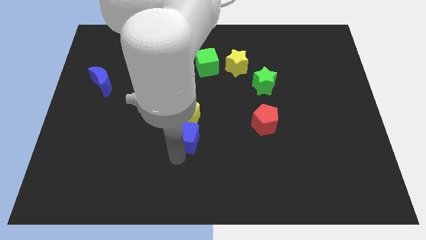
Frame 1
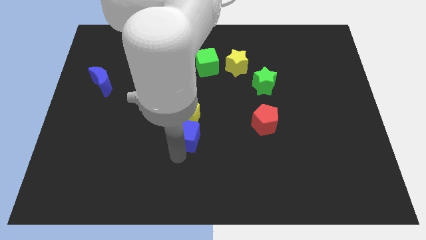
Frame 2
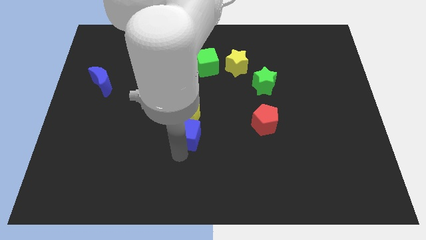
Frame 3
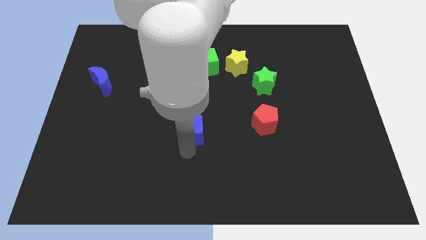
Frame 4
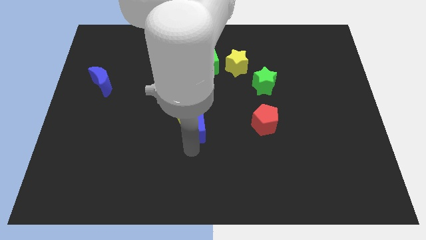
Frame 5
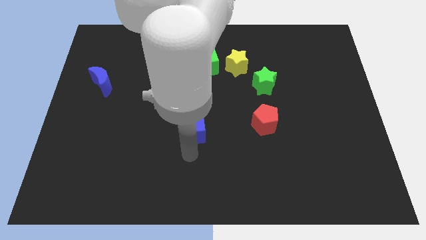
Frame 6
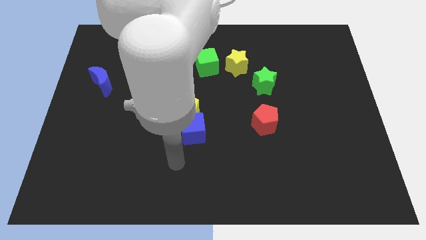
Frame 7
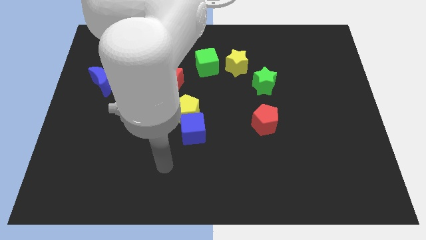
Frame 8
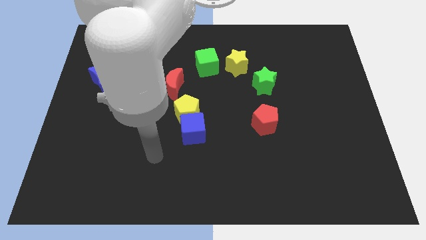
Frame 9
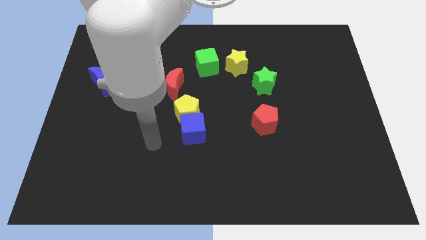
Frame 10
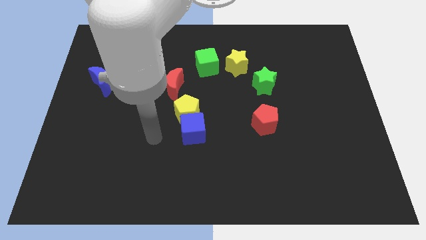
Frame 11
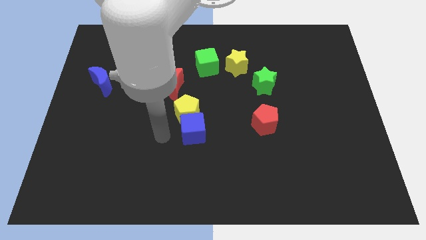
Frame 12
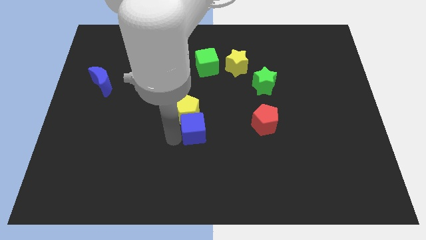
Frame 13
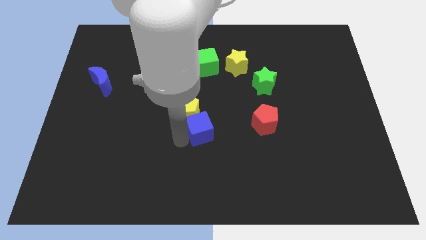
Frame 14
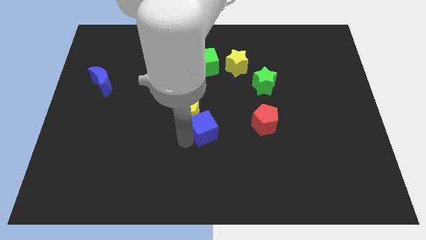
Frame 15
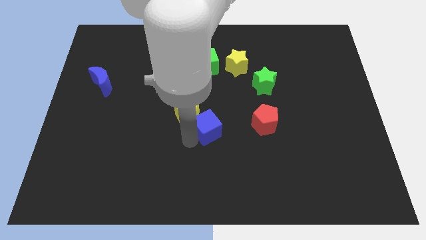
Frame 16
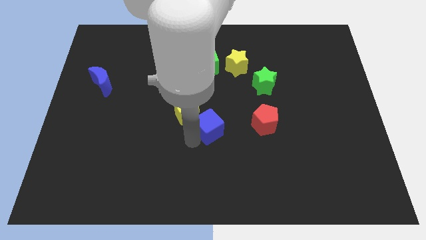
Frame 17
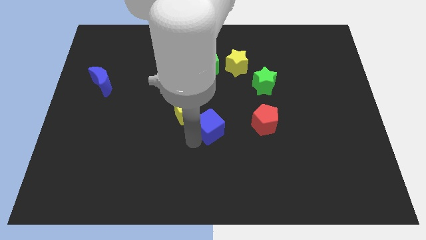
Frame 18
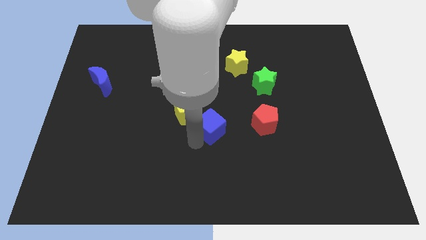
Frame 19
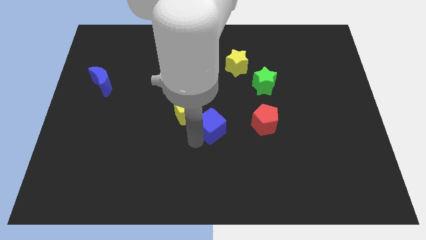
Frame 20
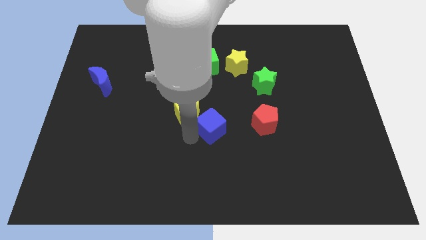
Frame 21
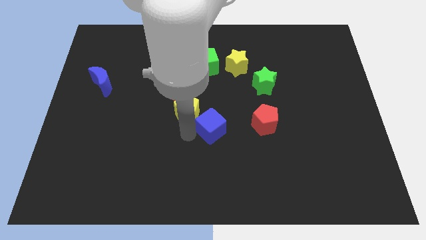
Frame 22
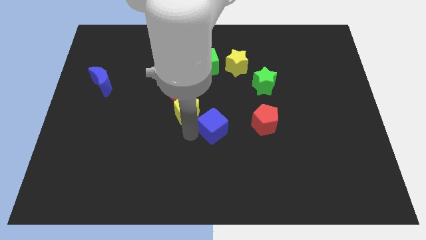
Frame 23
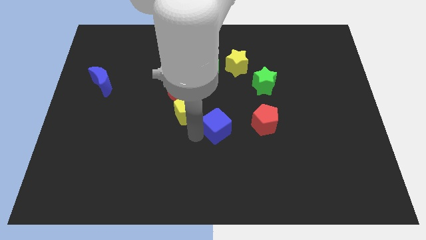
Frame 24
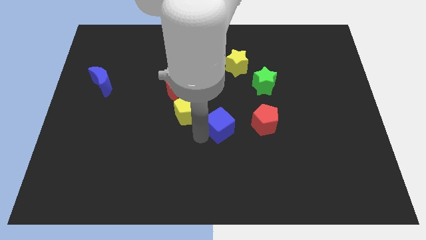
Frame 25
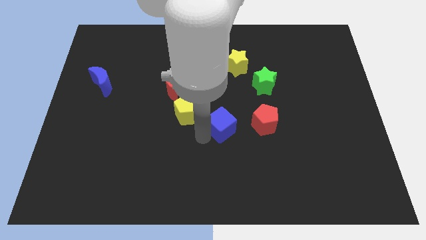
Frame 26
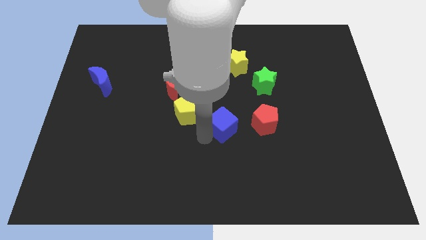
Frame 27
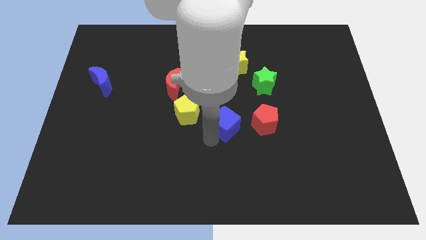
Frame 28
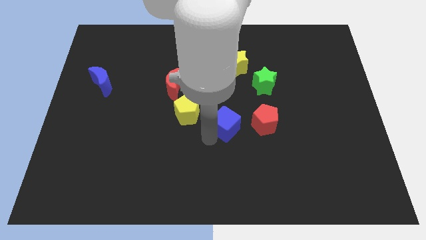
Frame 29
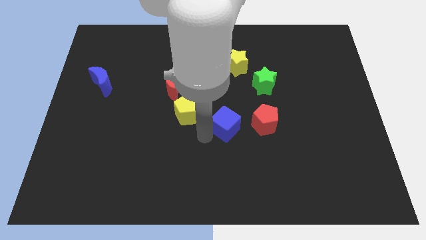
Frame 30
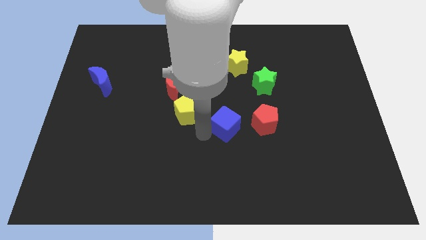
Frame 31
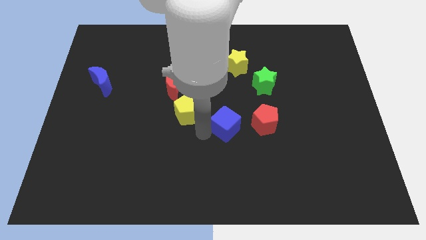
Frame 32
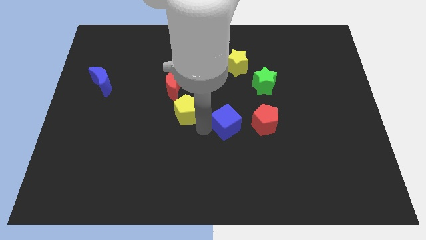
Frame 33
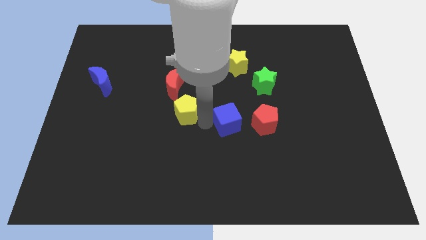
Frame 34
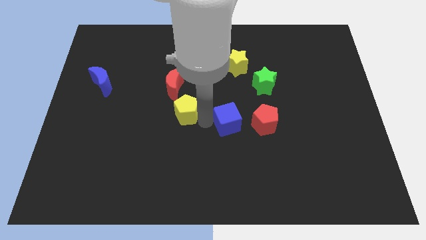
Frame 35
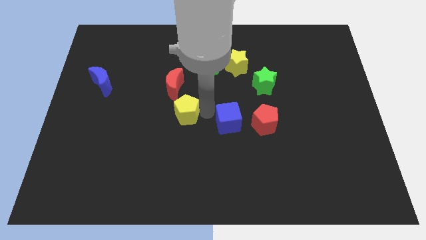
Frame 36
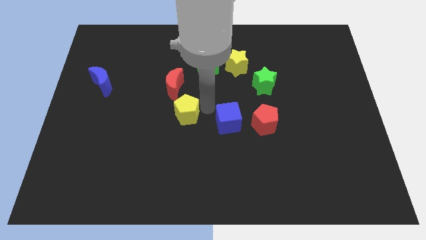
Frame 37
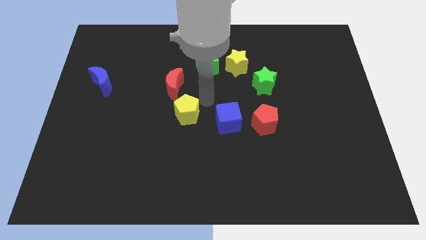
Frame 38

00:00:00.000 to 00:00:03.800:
put the blue cube between the yellow pentagon and red pentagon

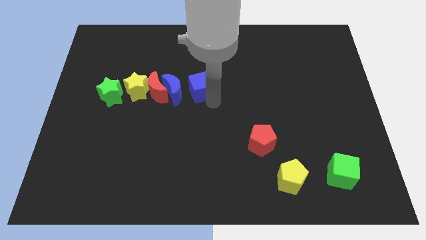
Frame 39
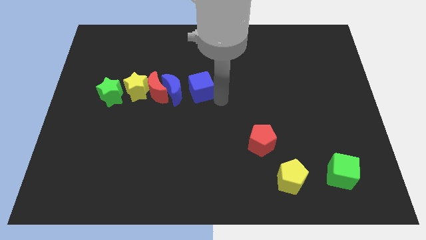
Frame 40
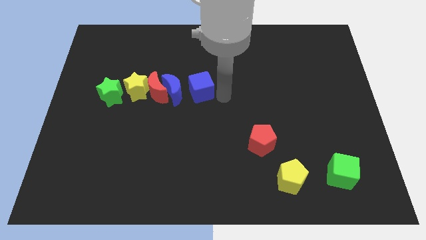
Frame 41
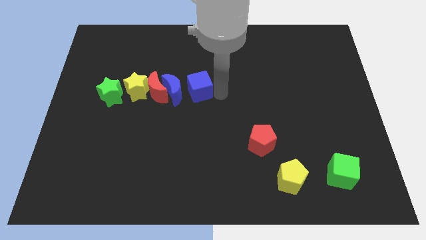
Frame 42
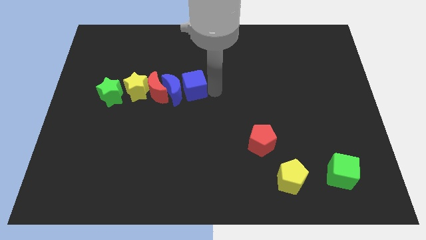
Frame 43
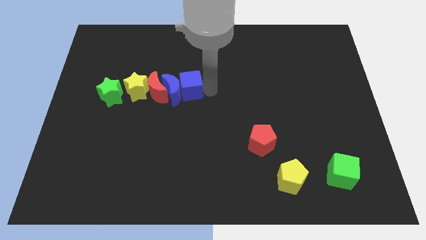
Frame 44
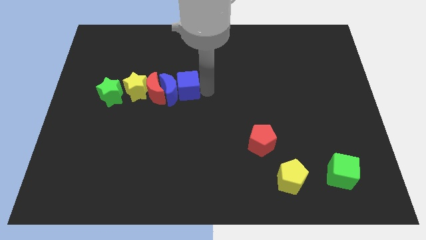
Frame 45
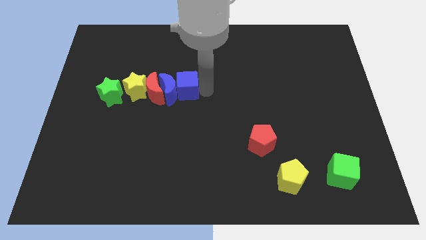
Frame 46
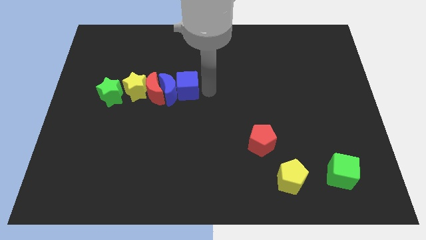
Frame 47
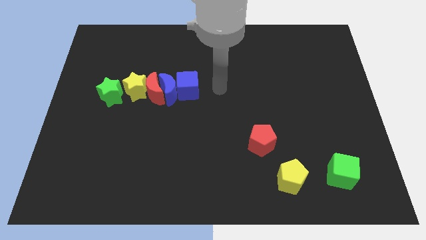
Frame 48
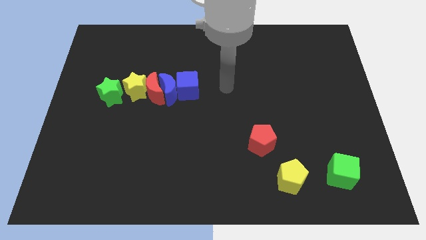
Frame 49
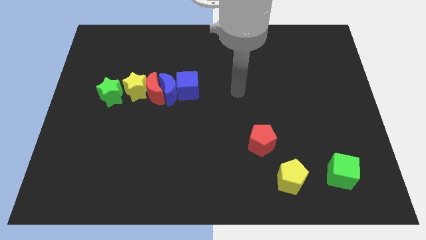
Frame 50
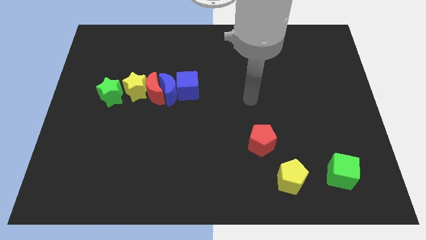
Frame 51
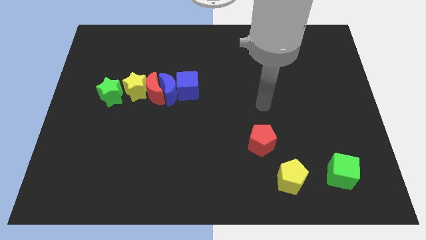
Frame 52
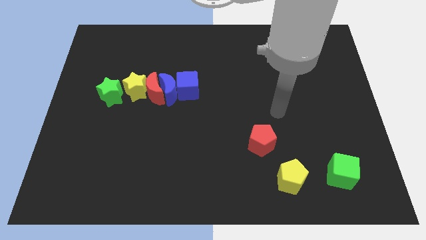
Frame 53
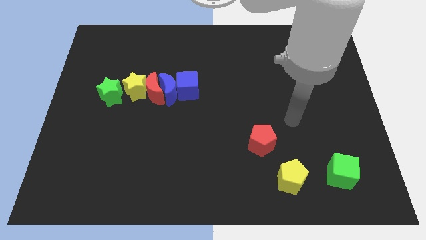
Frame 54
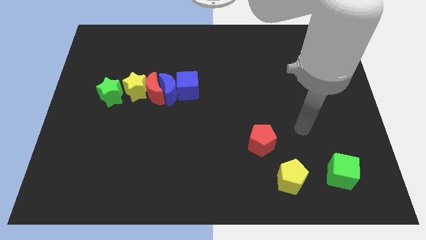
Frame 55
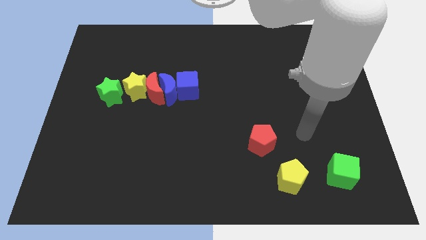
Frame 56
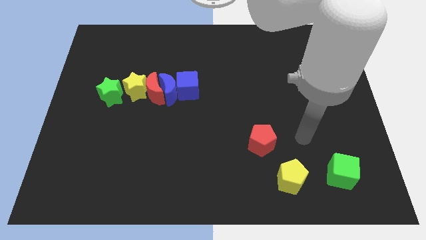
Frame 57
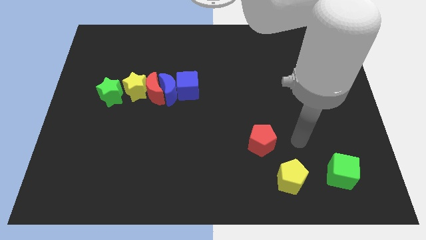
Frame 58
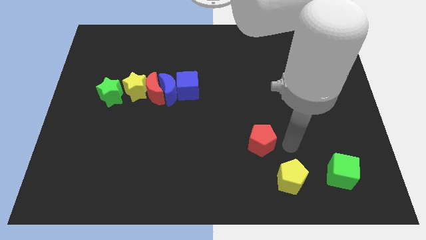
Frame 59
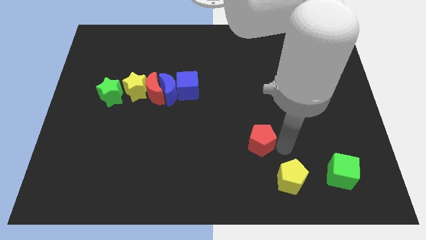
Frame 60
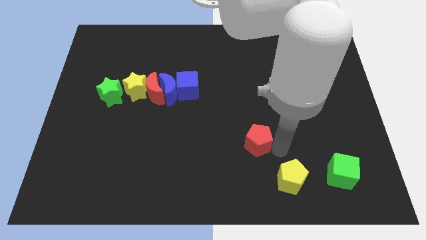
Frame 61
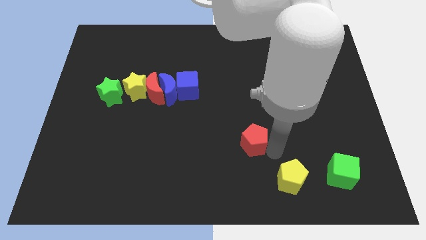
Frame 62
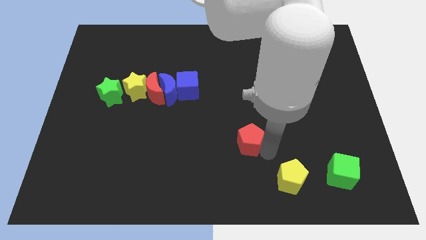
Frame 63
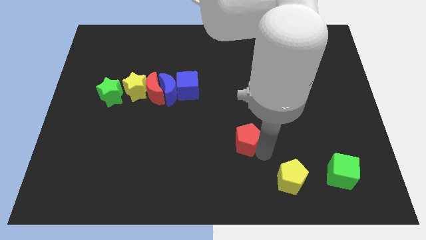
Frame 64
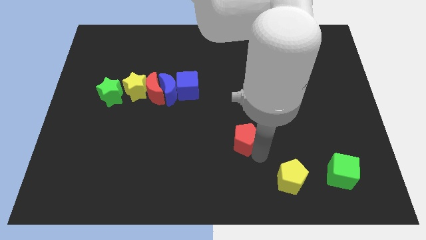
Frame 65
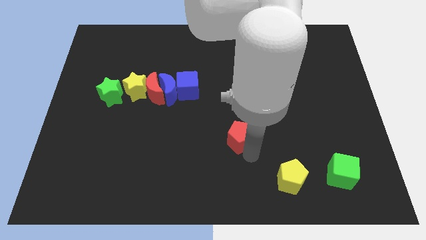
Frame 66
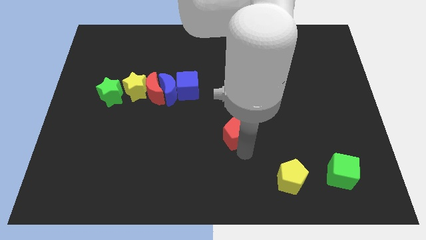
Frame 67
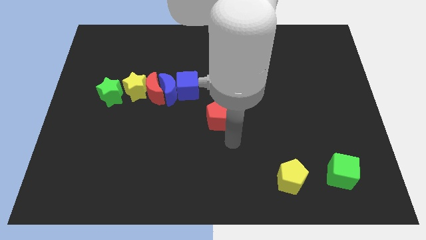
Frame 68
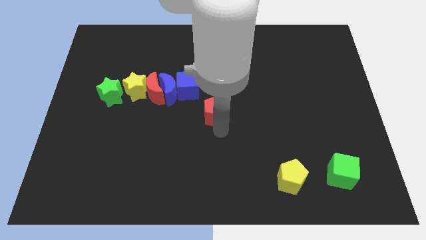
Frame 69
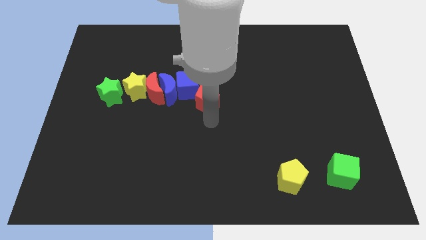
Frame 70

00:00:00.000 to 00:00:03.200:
move red pentagon into blue cube

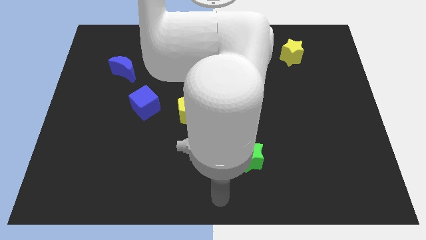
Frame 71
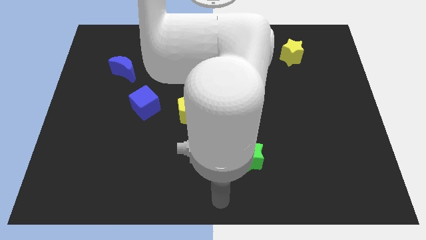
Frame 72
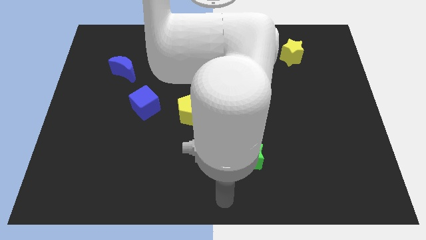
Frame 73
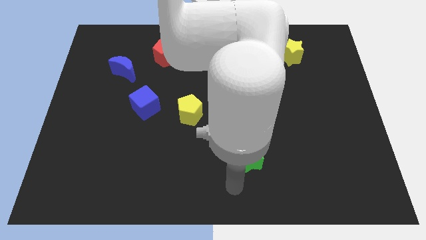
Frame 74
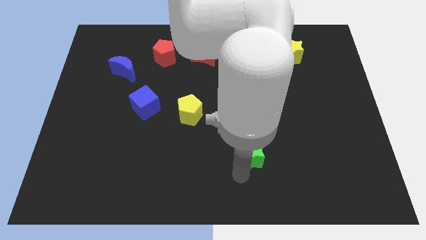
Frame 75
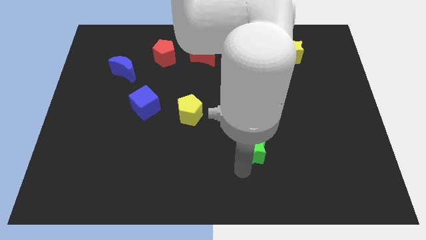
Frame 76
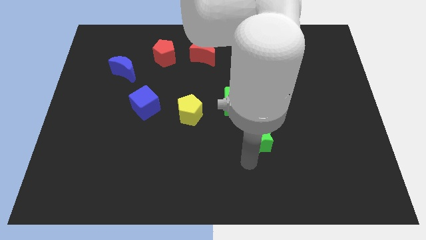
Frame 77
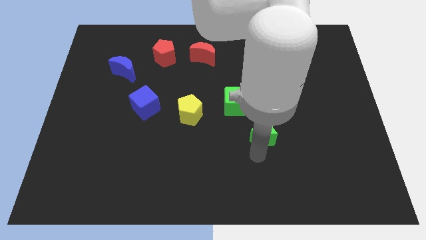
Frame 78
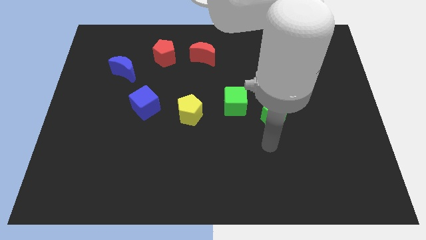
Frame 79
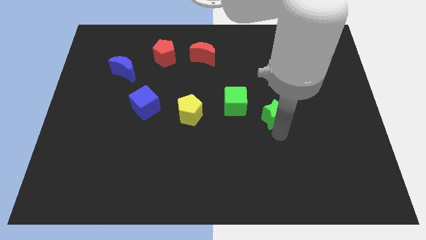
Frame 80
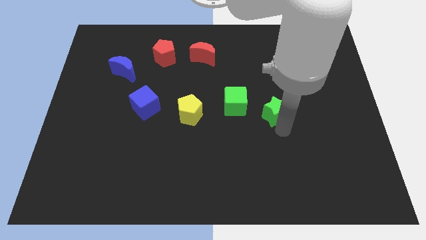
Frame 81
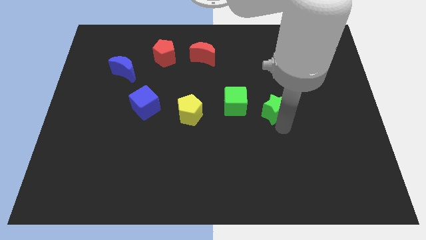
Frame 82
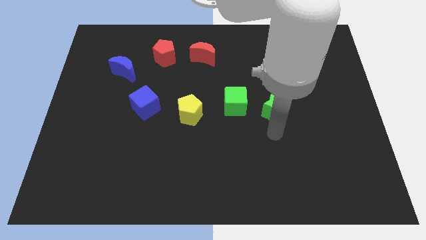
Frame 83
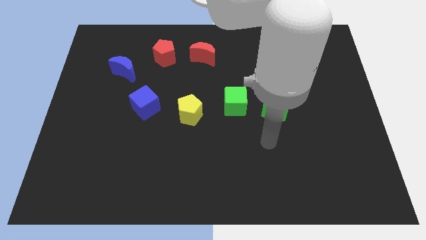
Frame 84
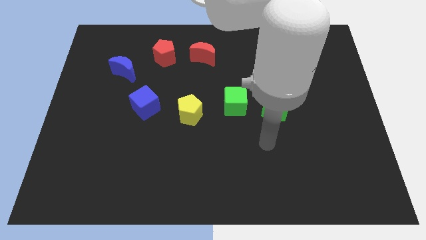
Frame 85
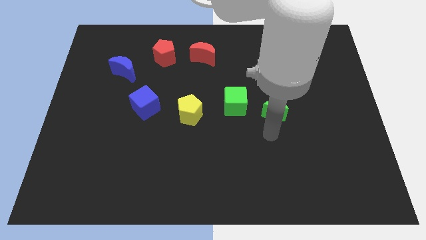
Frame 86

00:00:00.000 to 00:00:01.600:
place the green star at right side of the green cube

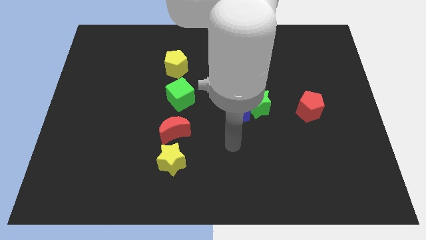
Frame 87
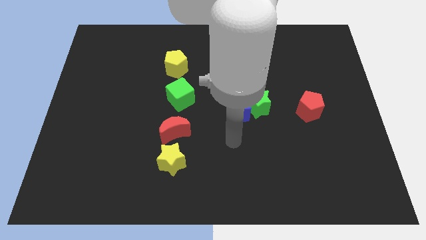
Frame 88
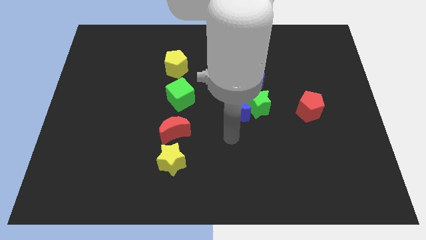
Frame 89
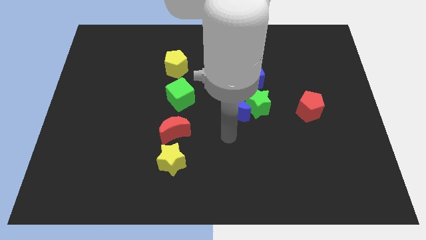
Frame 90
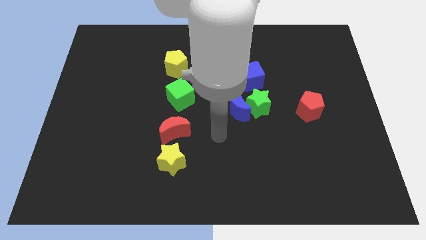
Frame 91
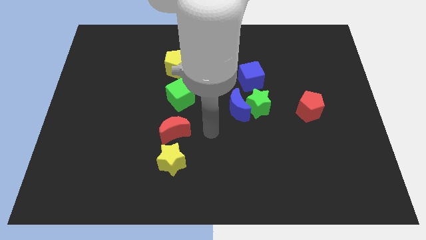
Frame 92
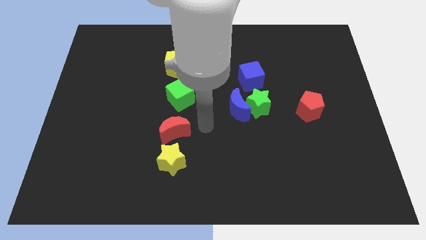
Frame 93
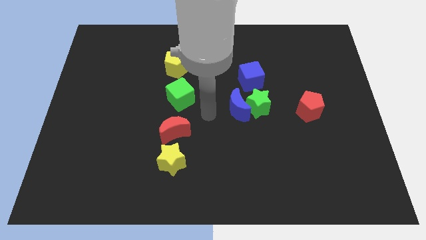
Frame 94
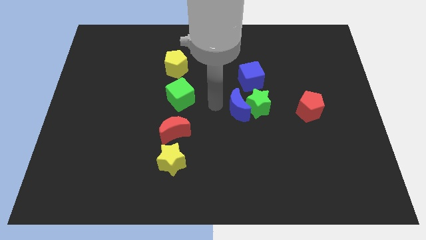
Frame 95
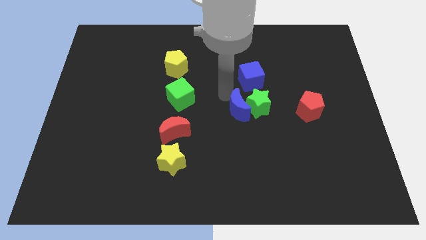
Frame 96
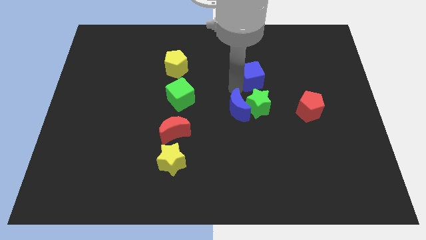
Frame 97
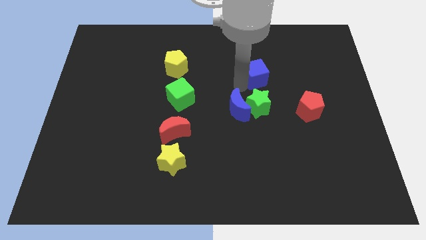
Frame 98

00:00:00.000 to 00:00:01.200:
move your arm to the top pf blue moon
